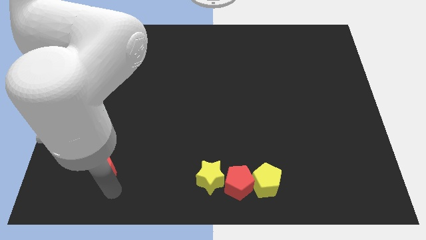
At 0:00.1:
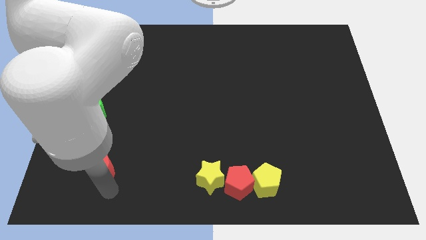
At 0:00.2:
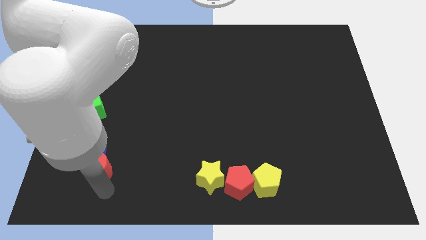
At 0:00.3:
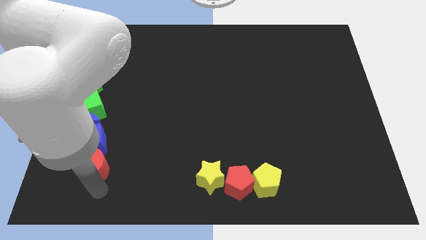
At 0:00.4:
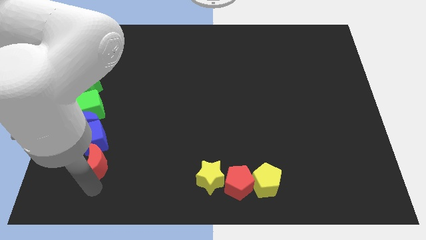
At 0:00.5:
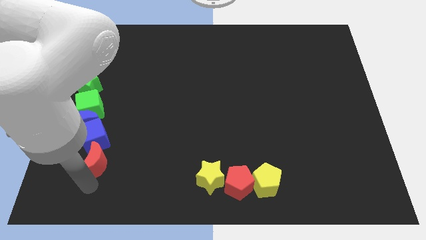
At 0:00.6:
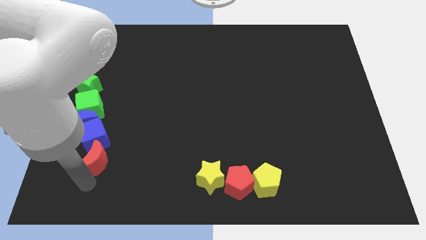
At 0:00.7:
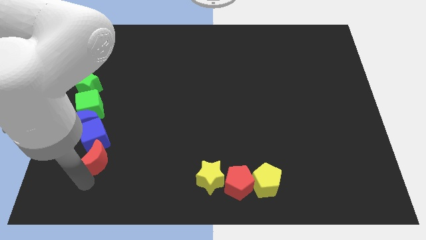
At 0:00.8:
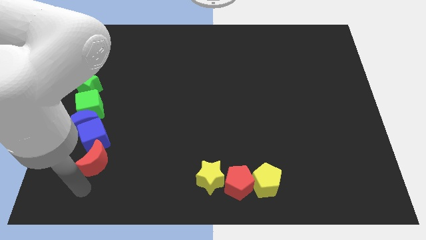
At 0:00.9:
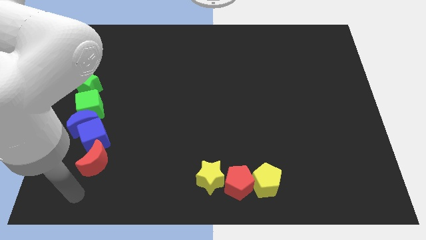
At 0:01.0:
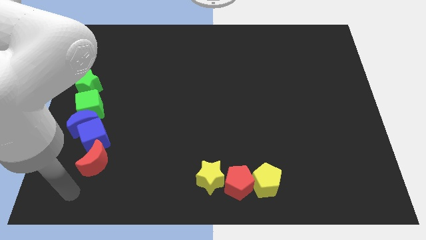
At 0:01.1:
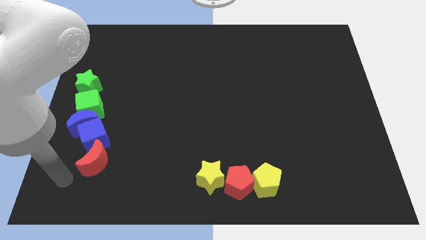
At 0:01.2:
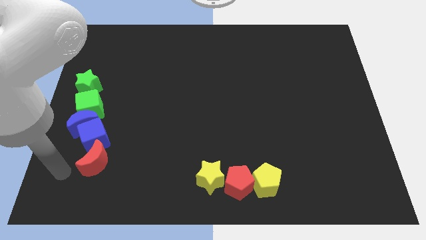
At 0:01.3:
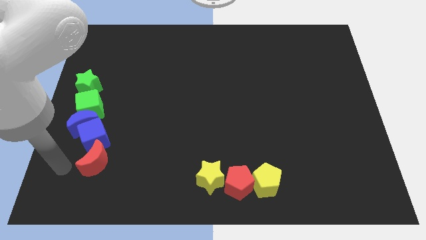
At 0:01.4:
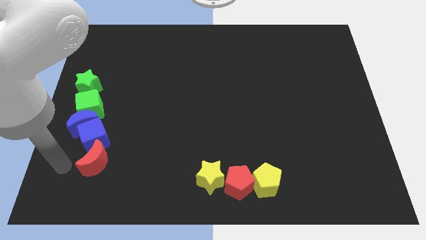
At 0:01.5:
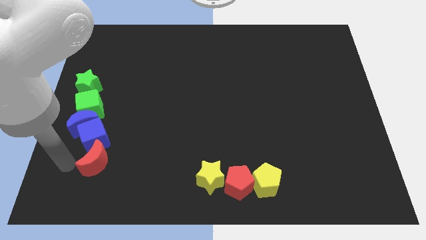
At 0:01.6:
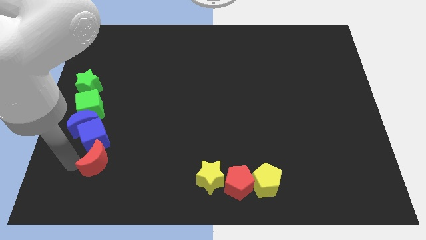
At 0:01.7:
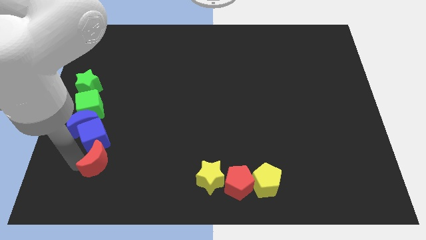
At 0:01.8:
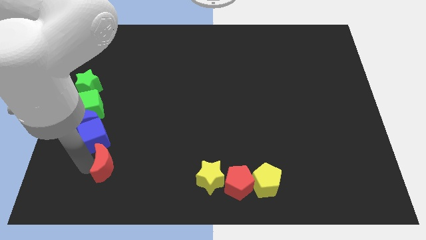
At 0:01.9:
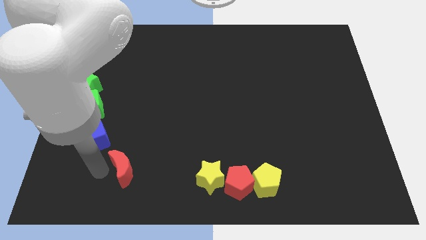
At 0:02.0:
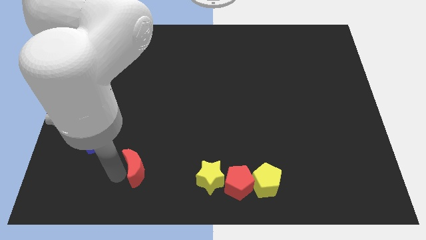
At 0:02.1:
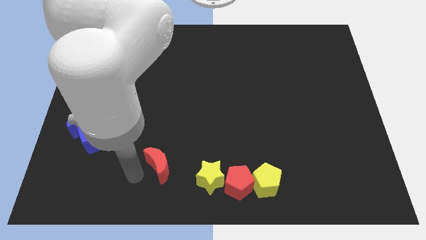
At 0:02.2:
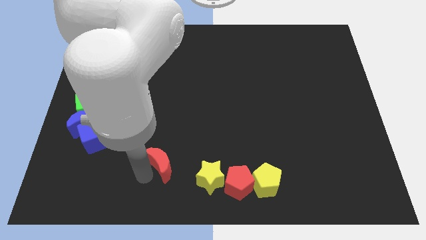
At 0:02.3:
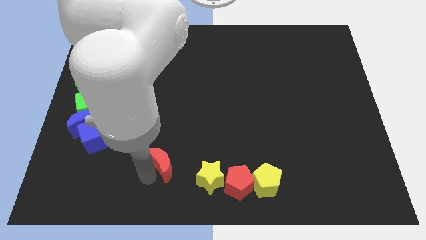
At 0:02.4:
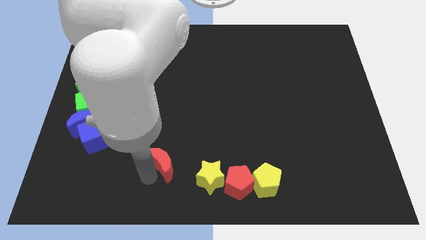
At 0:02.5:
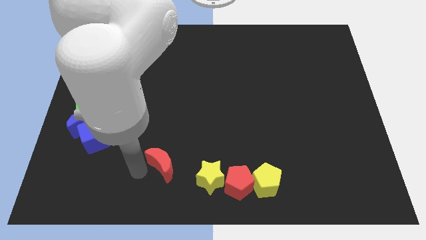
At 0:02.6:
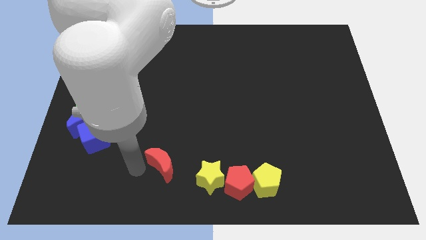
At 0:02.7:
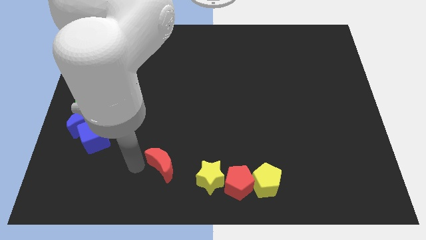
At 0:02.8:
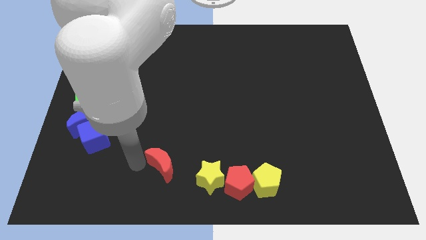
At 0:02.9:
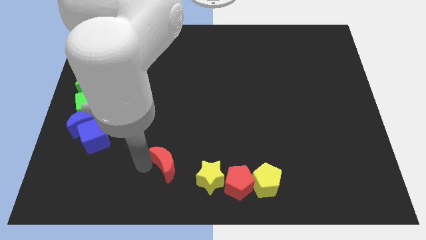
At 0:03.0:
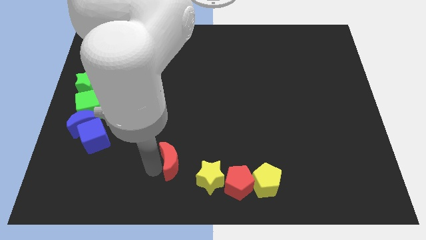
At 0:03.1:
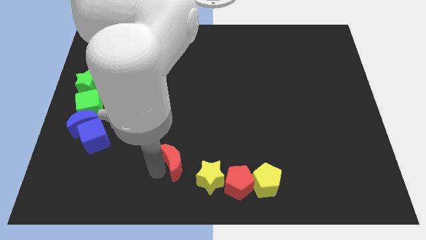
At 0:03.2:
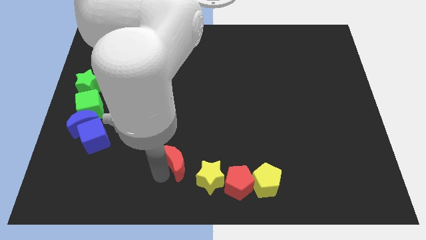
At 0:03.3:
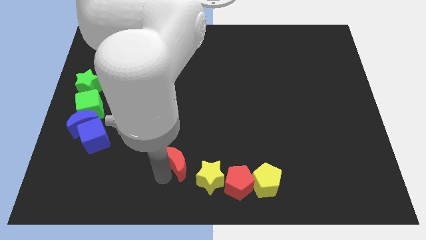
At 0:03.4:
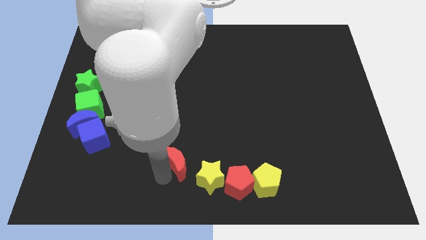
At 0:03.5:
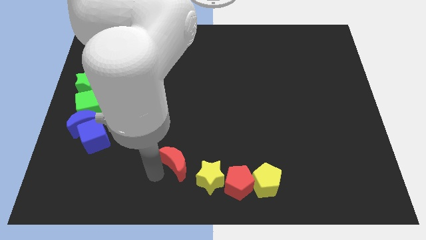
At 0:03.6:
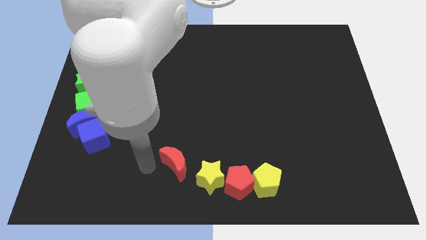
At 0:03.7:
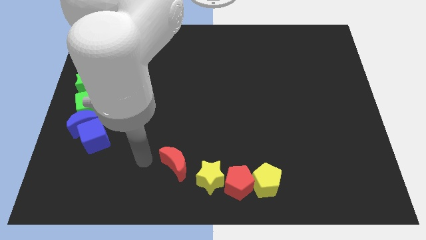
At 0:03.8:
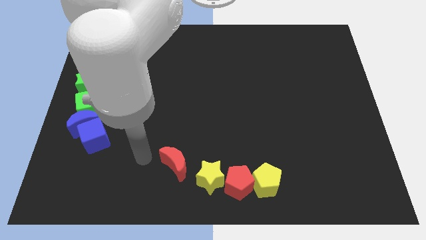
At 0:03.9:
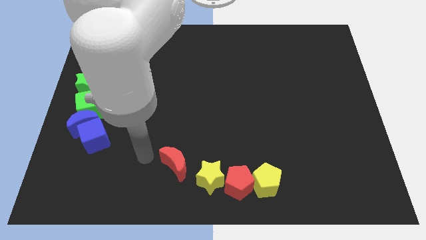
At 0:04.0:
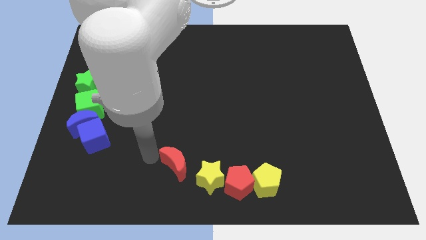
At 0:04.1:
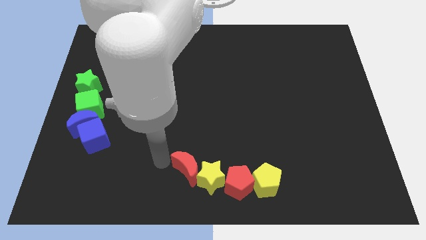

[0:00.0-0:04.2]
move the red moon to the left of yellow star

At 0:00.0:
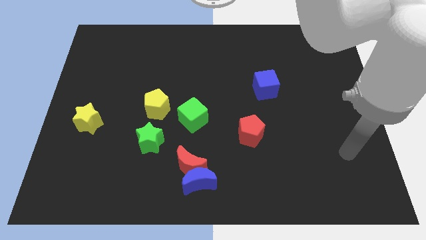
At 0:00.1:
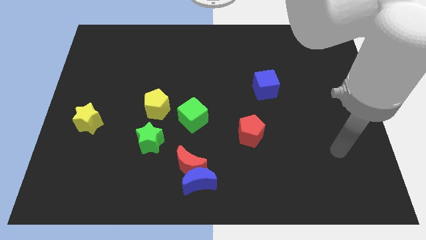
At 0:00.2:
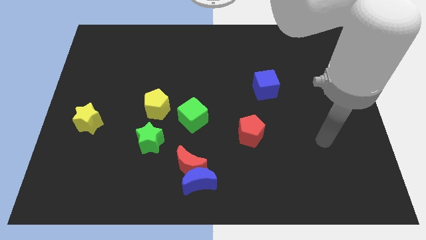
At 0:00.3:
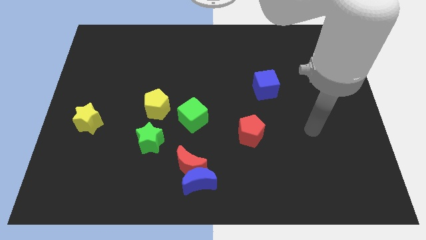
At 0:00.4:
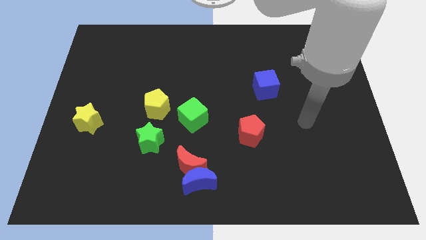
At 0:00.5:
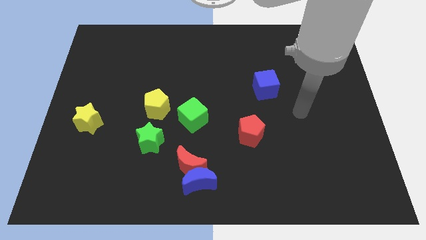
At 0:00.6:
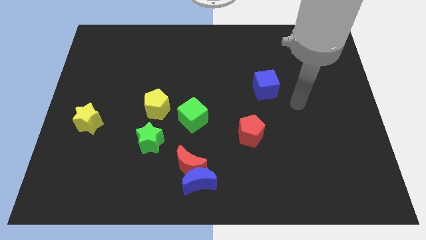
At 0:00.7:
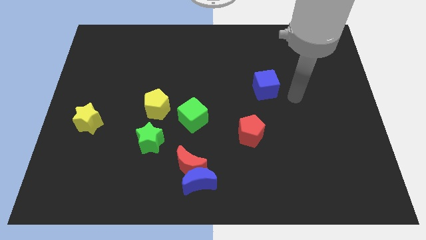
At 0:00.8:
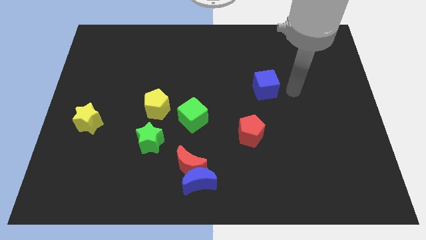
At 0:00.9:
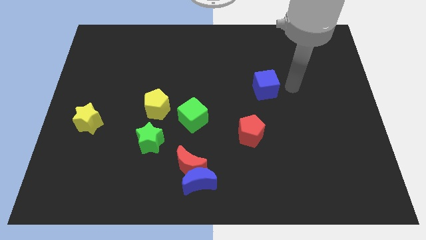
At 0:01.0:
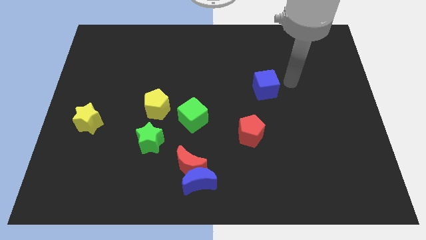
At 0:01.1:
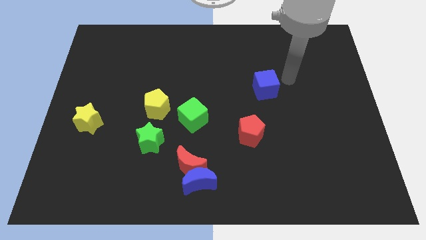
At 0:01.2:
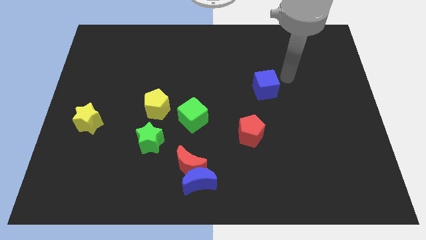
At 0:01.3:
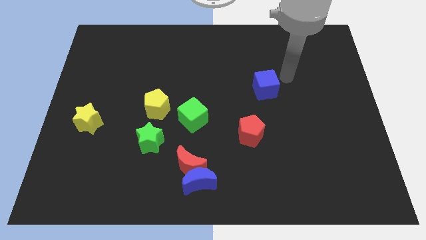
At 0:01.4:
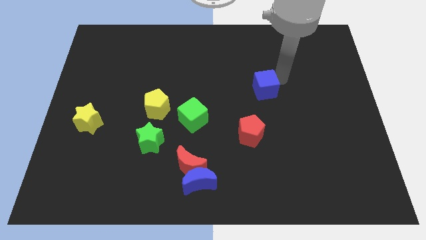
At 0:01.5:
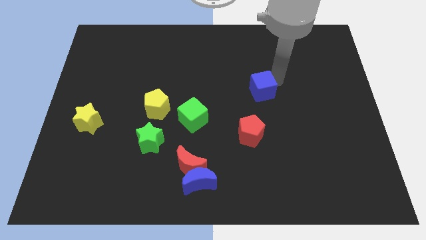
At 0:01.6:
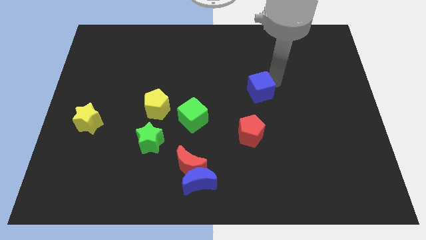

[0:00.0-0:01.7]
move the arm close to the blue cube

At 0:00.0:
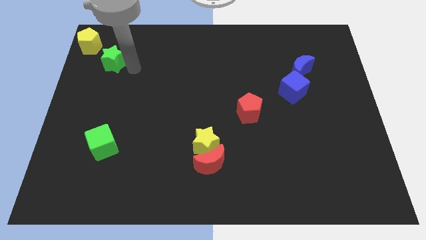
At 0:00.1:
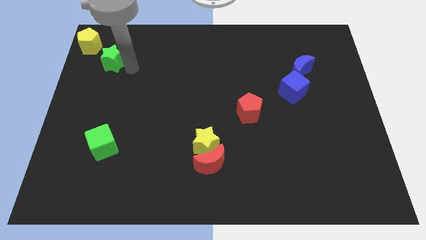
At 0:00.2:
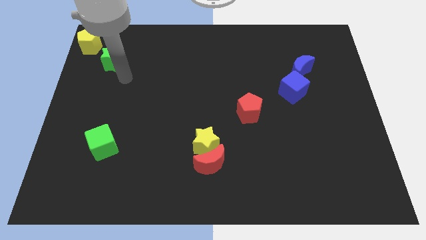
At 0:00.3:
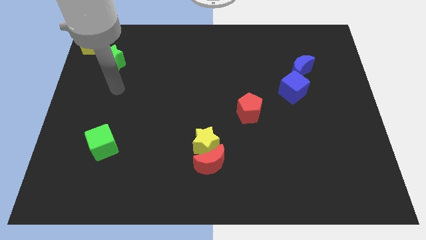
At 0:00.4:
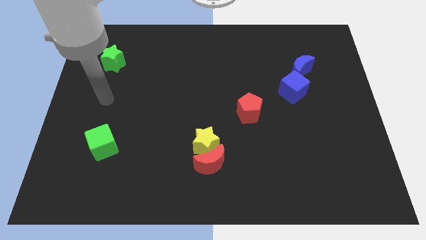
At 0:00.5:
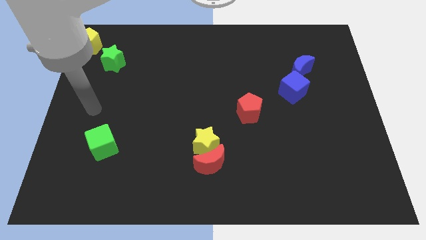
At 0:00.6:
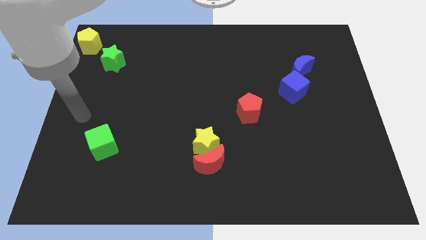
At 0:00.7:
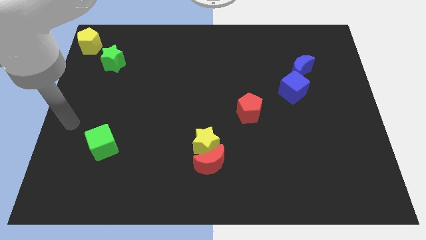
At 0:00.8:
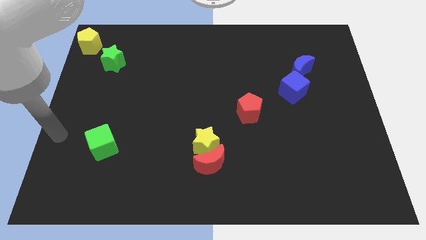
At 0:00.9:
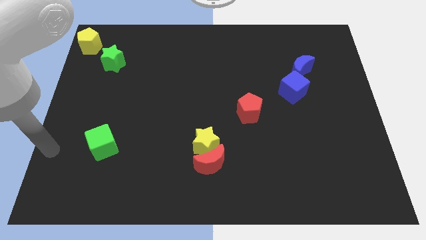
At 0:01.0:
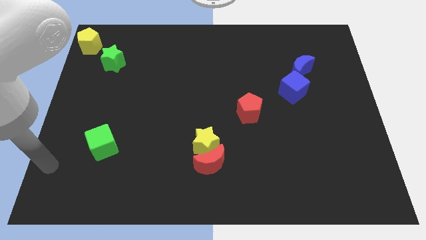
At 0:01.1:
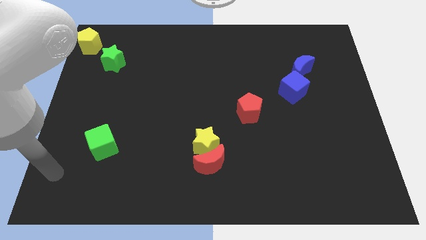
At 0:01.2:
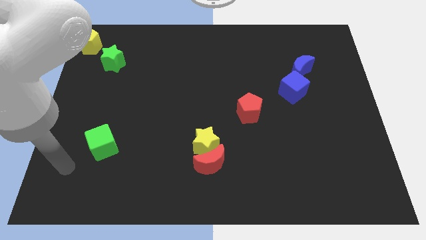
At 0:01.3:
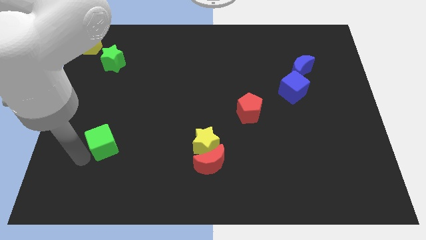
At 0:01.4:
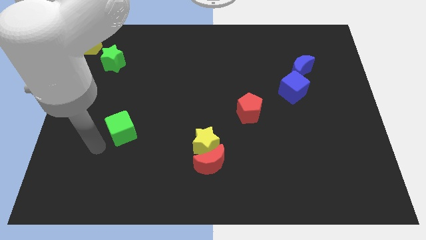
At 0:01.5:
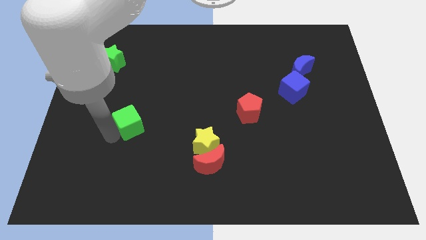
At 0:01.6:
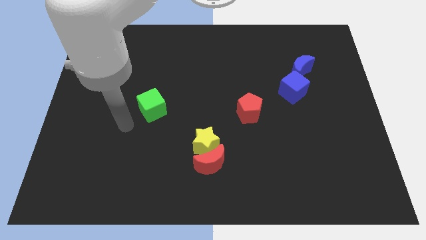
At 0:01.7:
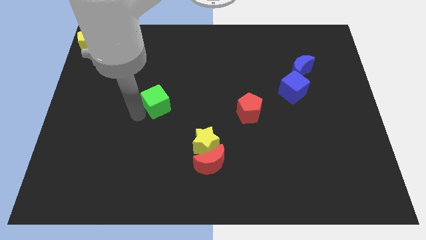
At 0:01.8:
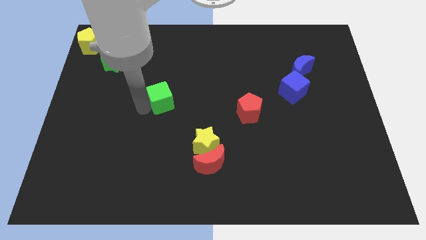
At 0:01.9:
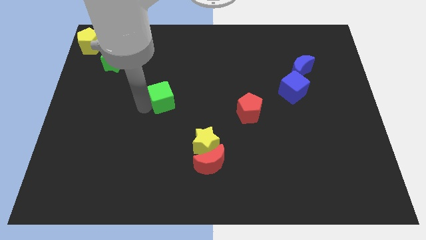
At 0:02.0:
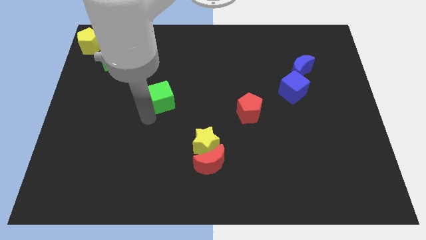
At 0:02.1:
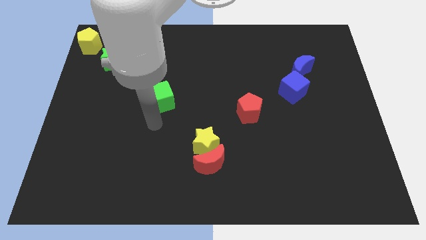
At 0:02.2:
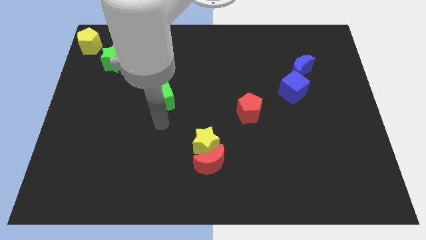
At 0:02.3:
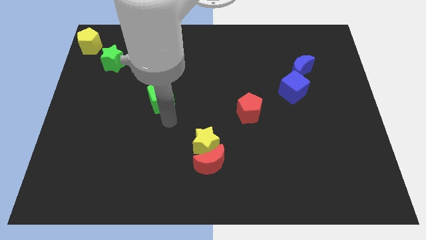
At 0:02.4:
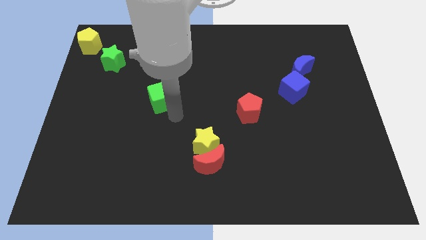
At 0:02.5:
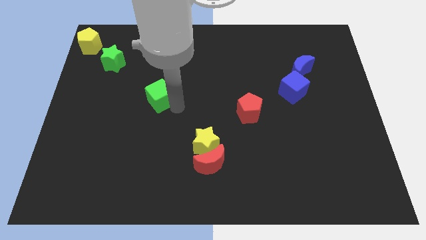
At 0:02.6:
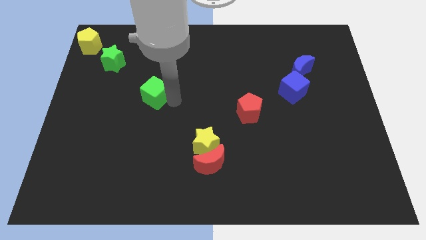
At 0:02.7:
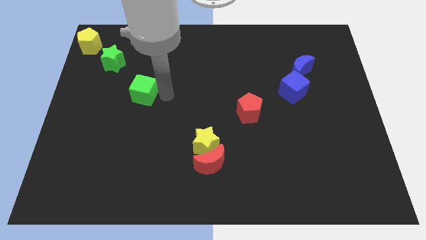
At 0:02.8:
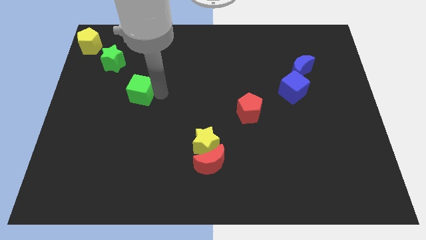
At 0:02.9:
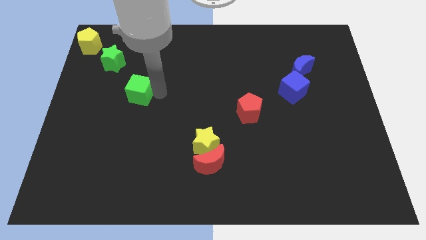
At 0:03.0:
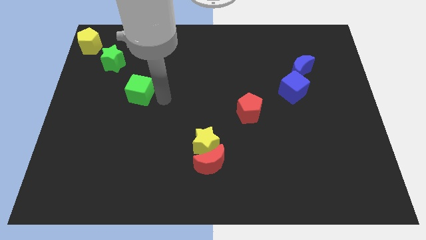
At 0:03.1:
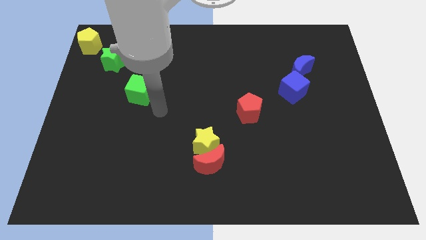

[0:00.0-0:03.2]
place the green cube diagonally top left to yellow star
